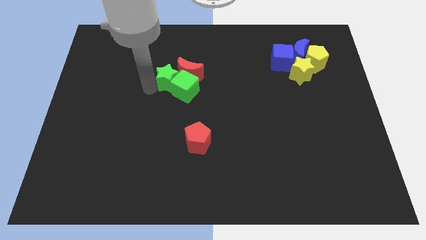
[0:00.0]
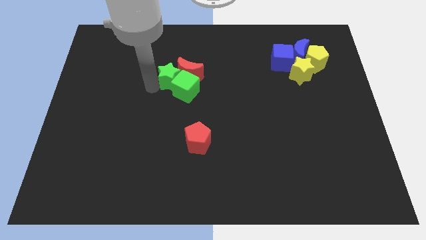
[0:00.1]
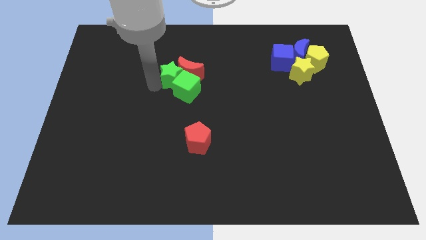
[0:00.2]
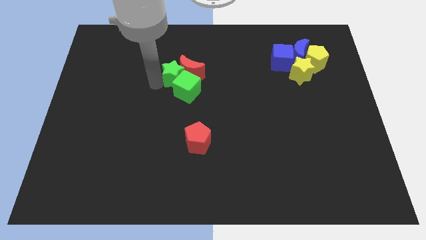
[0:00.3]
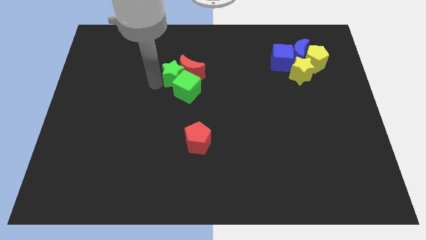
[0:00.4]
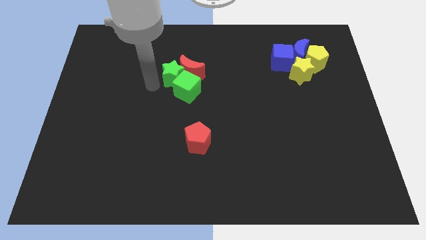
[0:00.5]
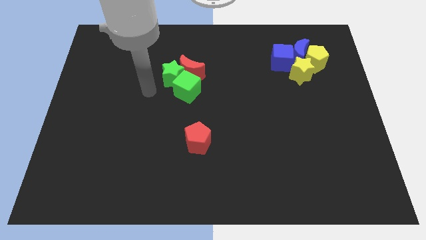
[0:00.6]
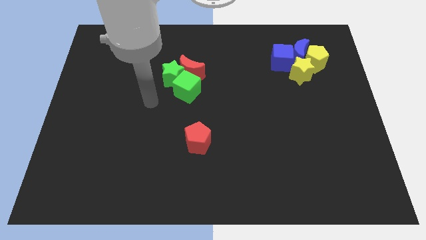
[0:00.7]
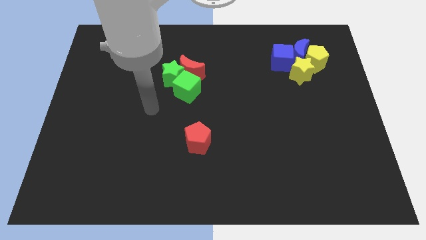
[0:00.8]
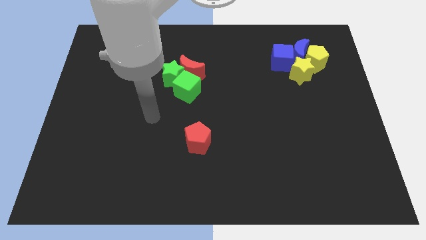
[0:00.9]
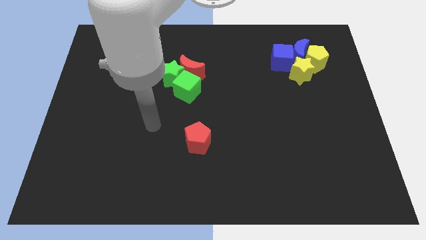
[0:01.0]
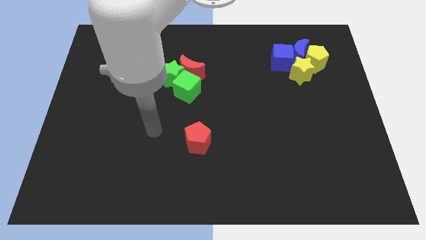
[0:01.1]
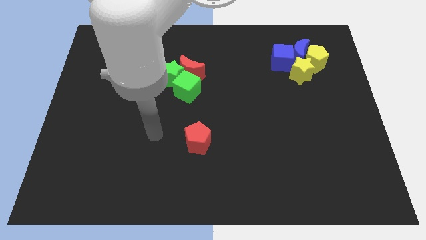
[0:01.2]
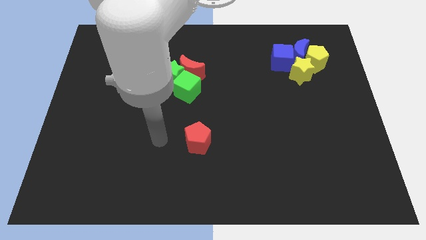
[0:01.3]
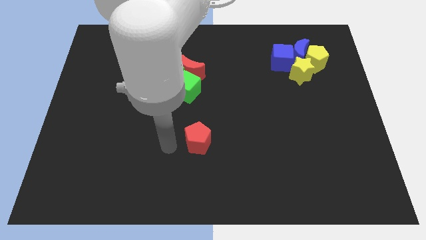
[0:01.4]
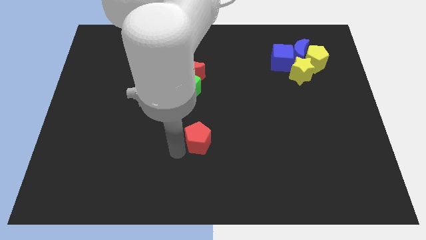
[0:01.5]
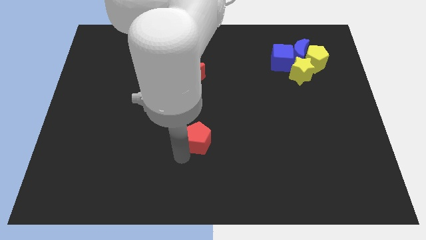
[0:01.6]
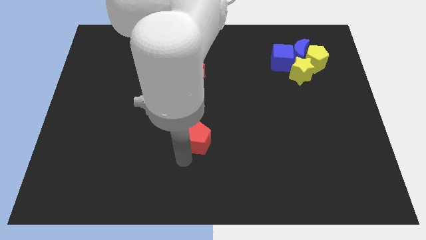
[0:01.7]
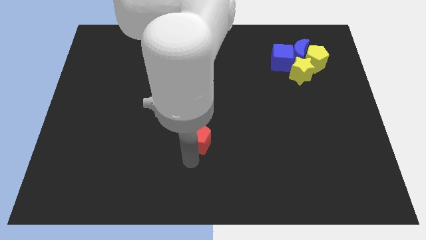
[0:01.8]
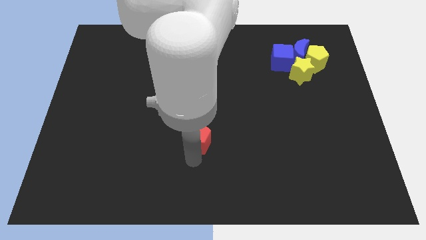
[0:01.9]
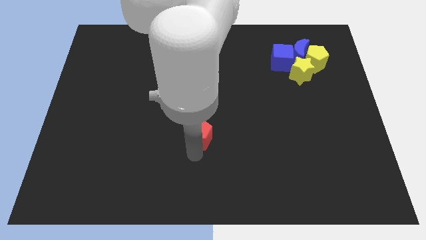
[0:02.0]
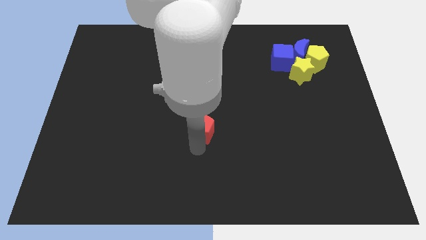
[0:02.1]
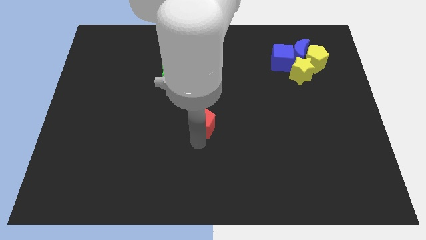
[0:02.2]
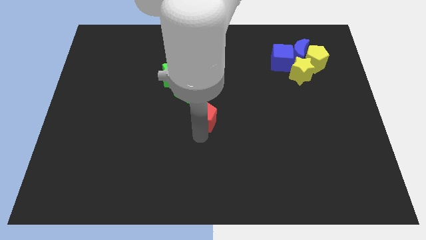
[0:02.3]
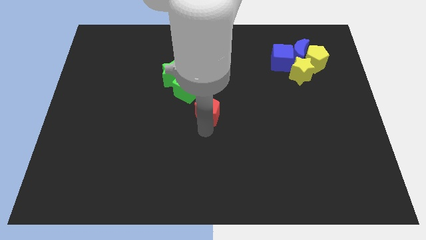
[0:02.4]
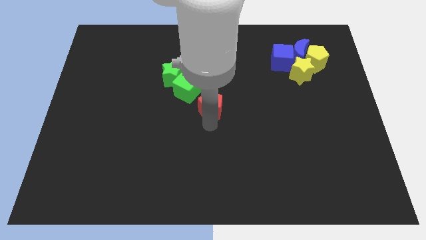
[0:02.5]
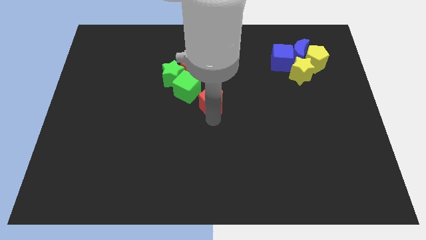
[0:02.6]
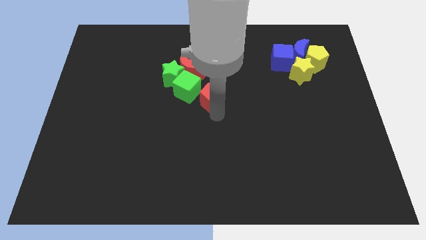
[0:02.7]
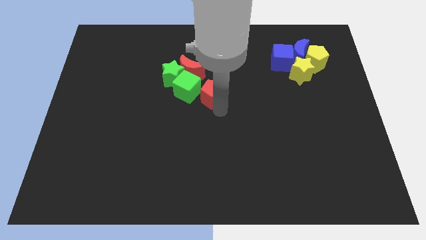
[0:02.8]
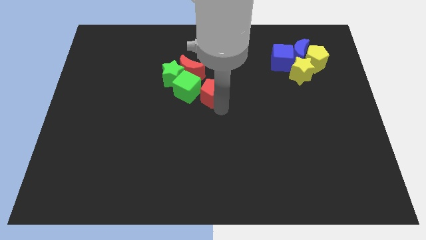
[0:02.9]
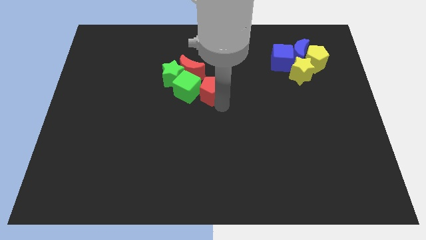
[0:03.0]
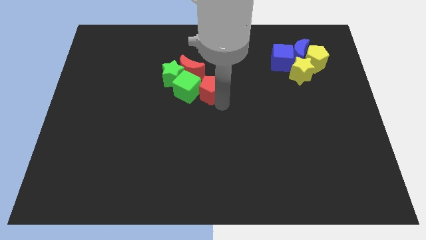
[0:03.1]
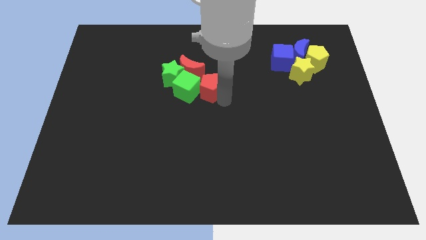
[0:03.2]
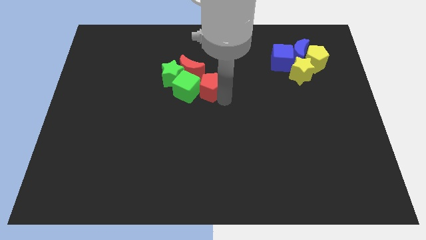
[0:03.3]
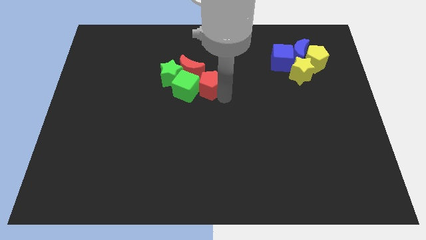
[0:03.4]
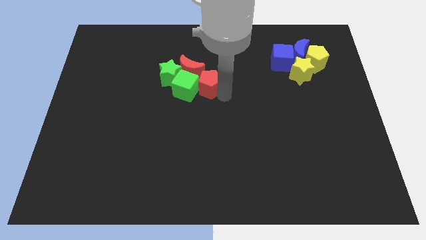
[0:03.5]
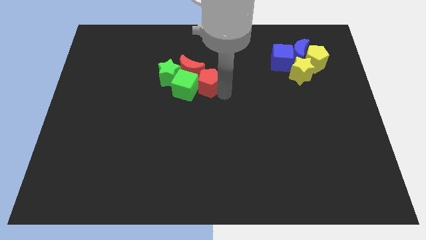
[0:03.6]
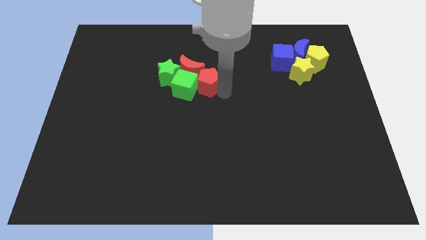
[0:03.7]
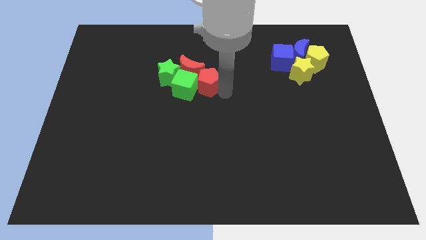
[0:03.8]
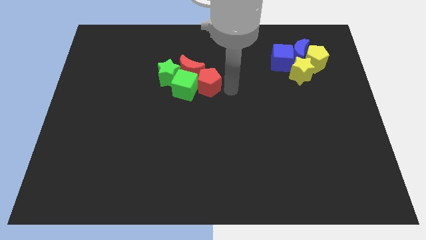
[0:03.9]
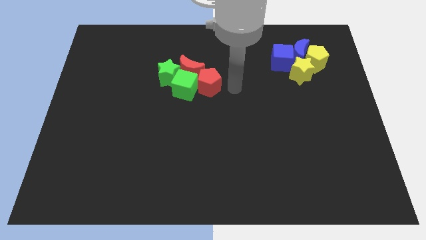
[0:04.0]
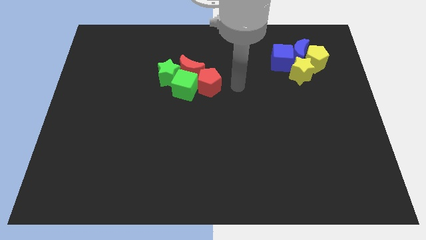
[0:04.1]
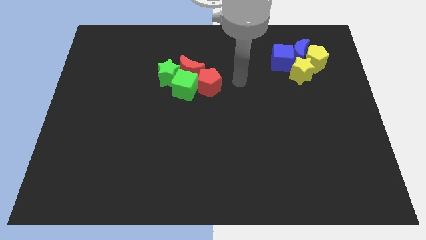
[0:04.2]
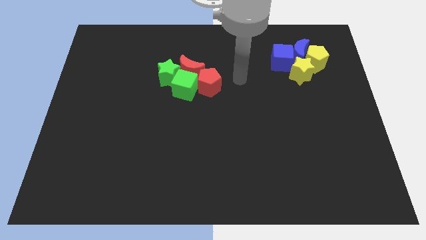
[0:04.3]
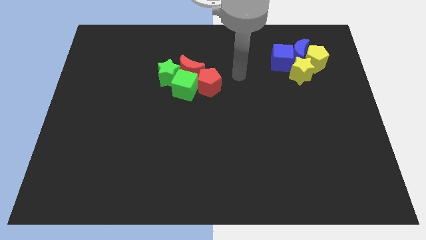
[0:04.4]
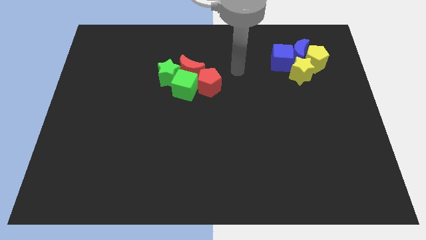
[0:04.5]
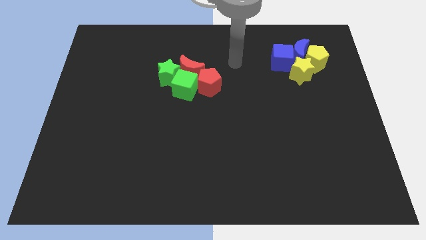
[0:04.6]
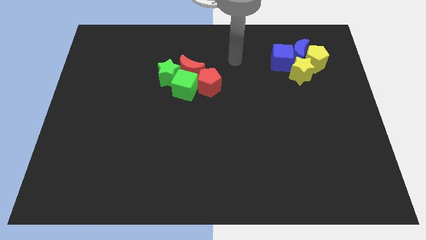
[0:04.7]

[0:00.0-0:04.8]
place red pentagon on the right side of the green cube

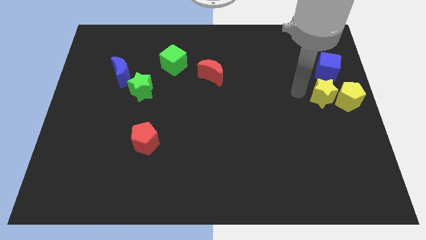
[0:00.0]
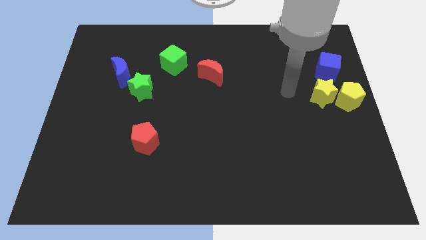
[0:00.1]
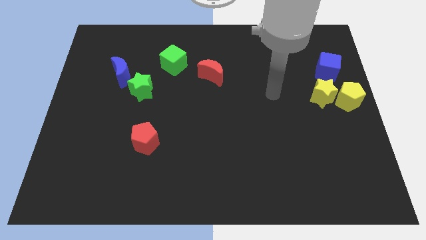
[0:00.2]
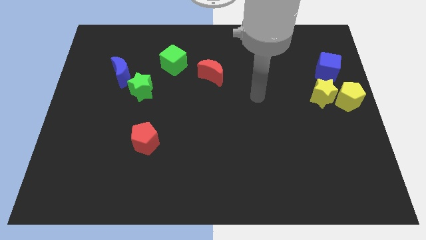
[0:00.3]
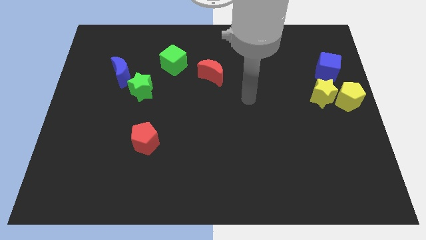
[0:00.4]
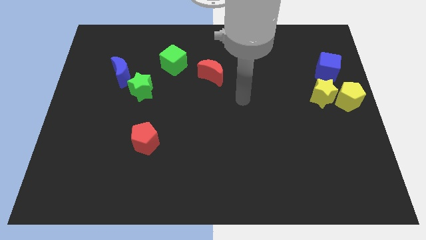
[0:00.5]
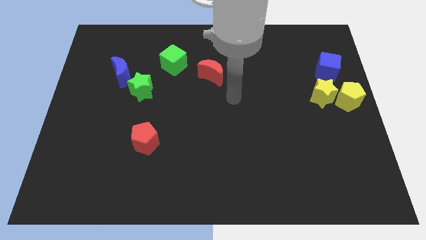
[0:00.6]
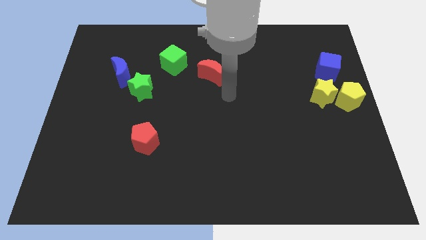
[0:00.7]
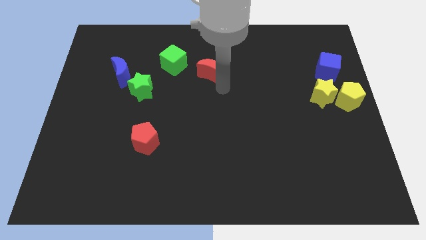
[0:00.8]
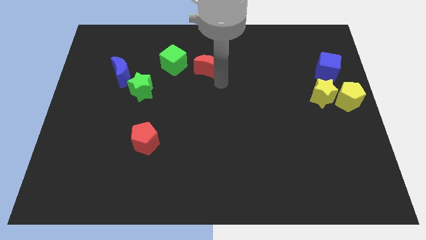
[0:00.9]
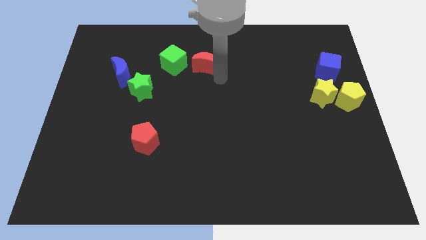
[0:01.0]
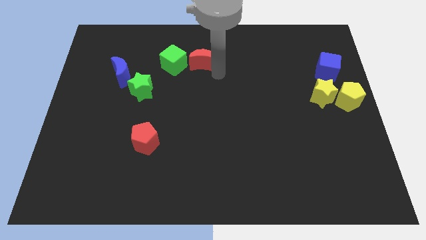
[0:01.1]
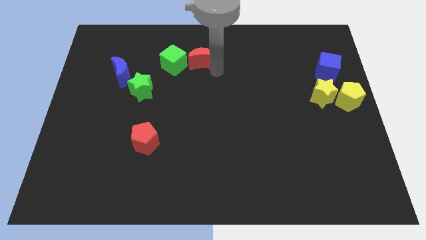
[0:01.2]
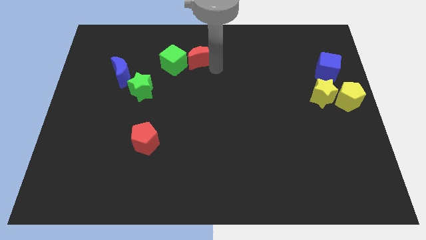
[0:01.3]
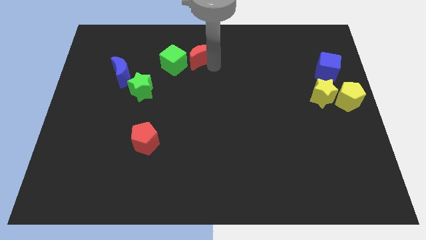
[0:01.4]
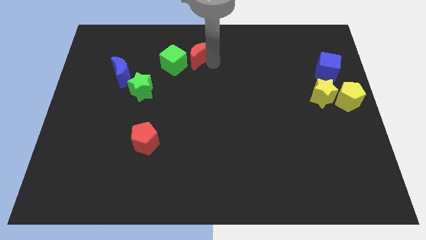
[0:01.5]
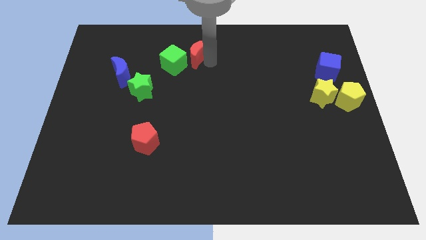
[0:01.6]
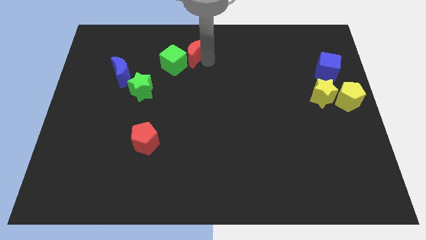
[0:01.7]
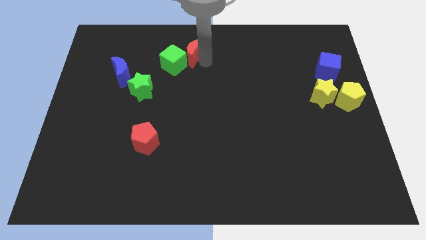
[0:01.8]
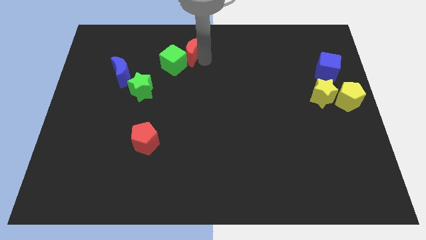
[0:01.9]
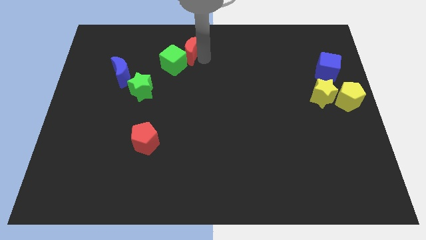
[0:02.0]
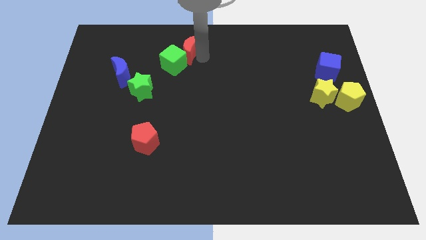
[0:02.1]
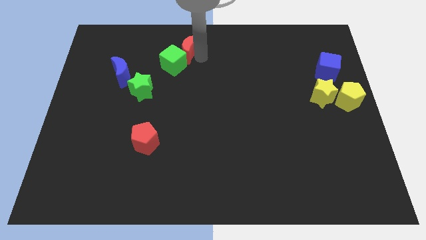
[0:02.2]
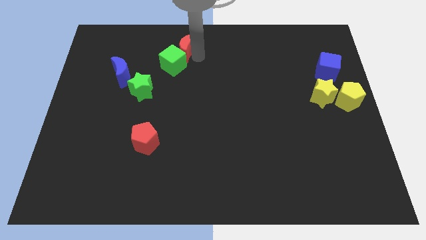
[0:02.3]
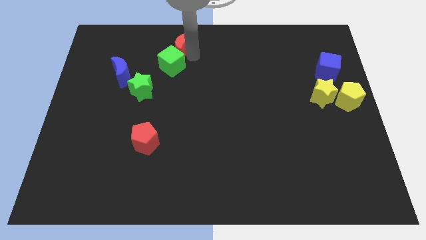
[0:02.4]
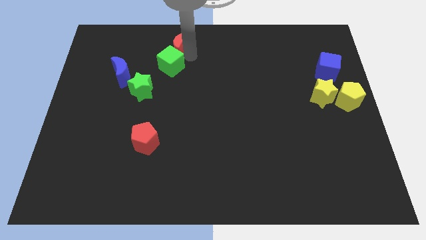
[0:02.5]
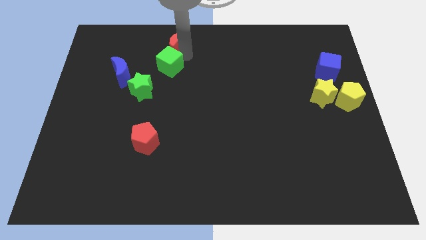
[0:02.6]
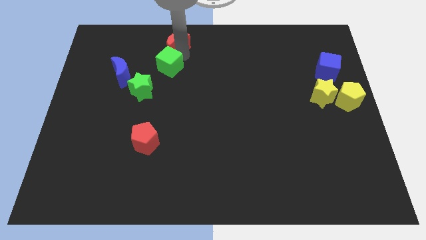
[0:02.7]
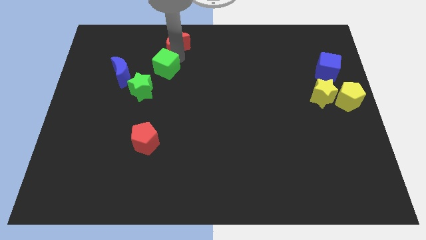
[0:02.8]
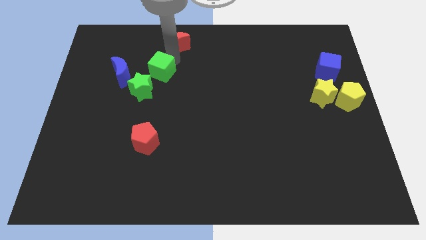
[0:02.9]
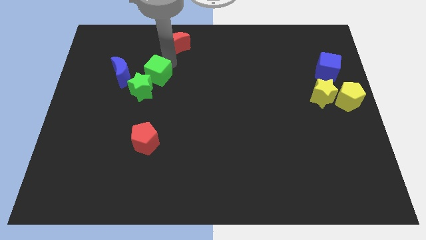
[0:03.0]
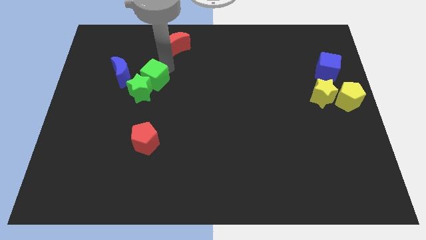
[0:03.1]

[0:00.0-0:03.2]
move the red crescent to the top of the board

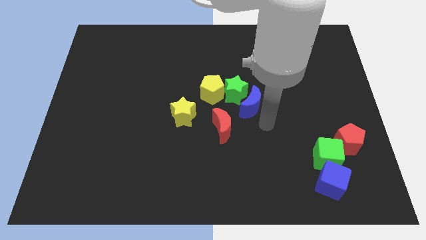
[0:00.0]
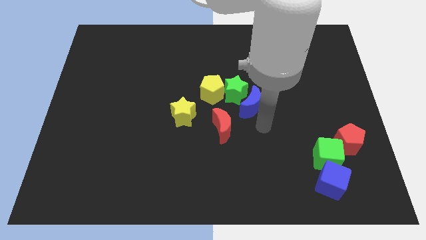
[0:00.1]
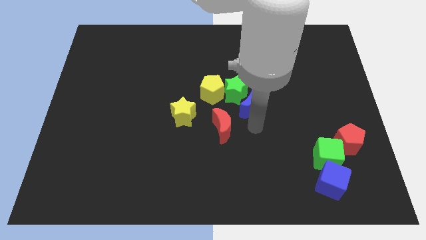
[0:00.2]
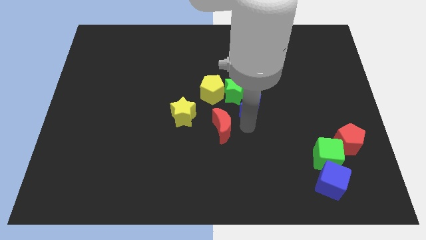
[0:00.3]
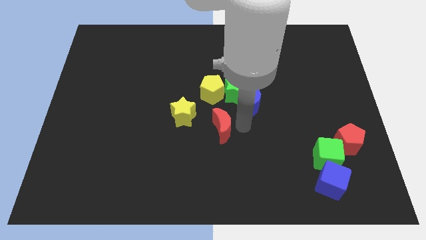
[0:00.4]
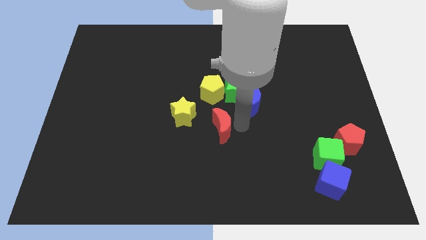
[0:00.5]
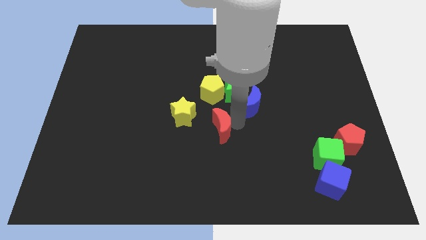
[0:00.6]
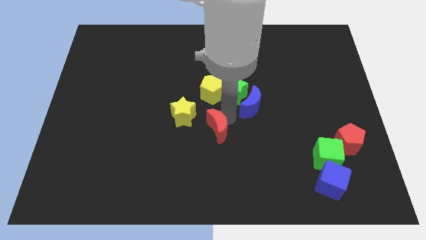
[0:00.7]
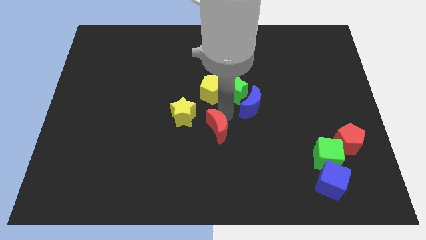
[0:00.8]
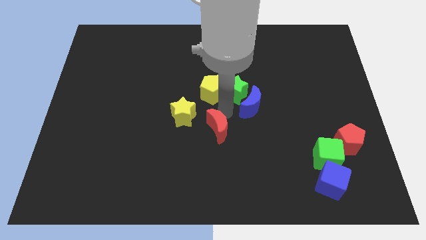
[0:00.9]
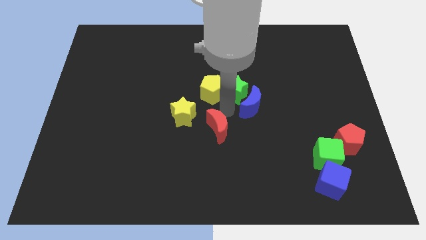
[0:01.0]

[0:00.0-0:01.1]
slightly move the red crescent to the right of the yellow star
